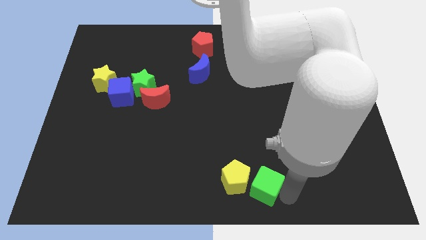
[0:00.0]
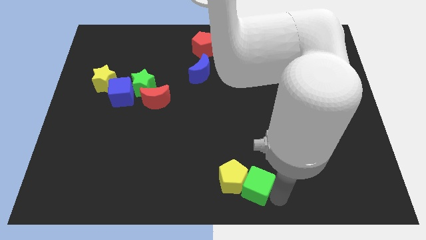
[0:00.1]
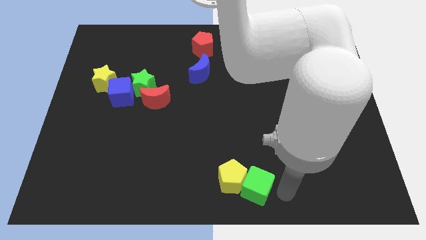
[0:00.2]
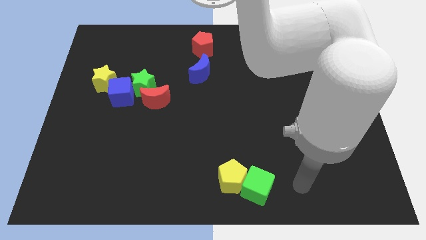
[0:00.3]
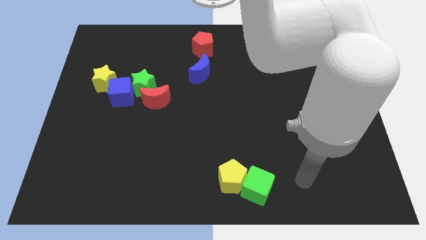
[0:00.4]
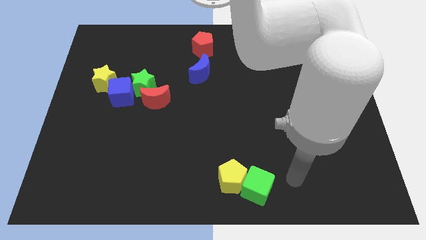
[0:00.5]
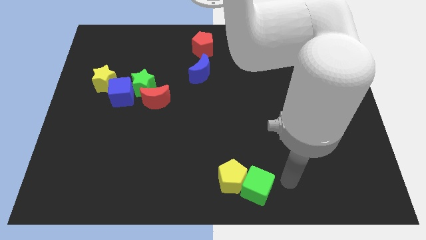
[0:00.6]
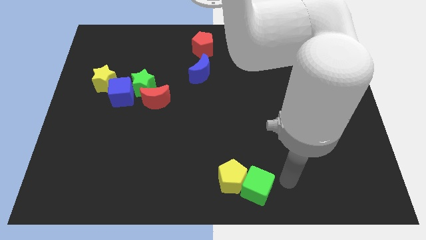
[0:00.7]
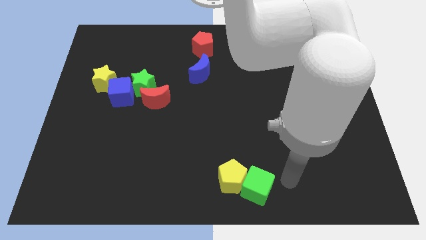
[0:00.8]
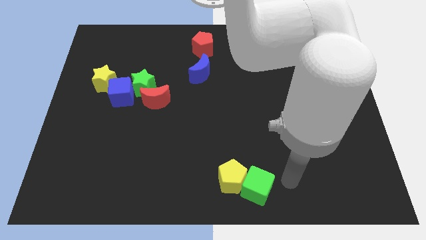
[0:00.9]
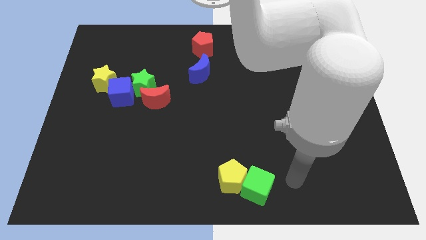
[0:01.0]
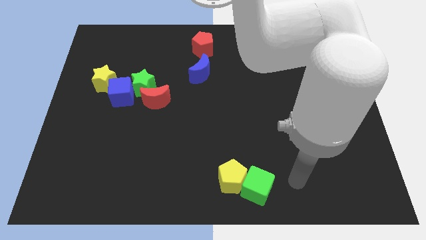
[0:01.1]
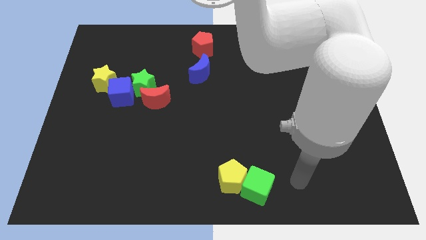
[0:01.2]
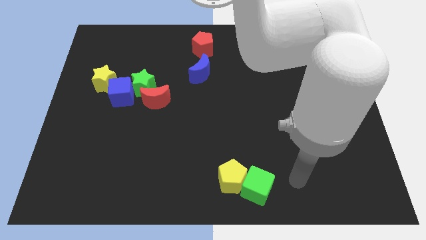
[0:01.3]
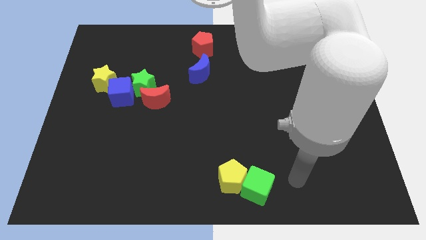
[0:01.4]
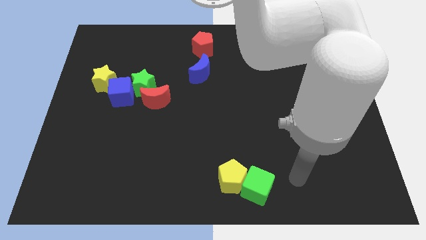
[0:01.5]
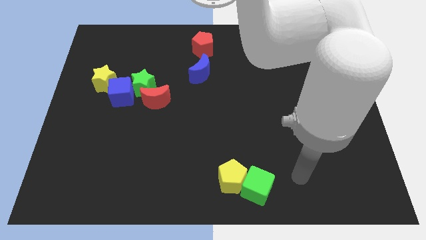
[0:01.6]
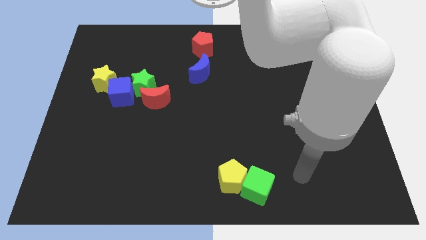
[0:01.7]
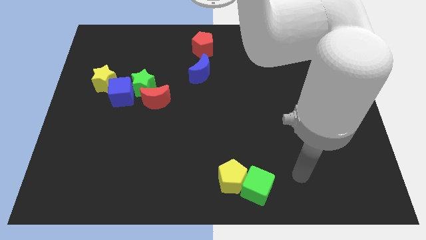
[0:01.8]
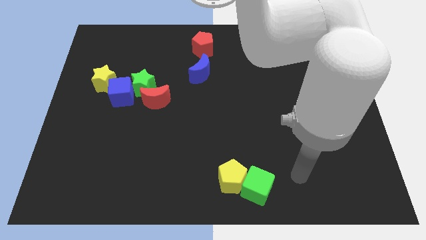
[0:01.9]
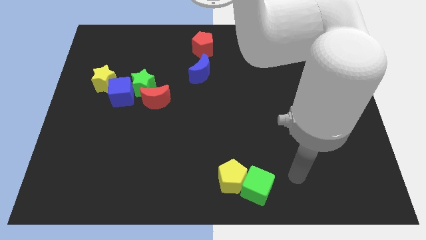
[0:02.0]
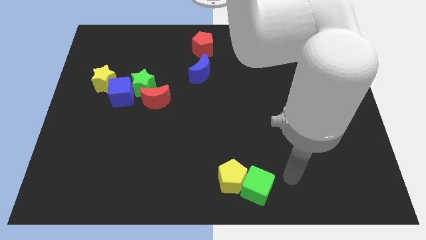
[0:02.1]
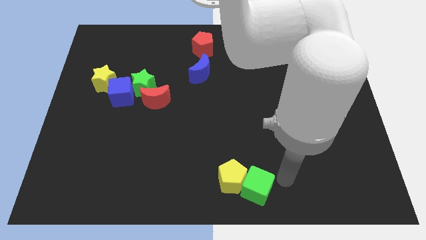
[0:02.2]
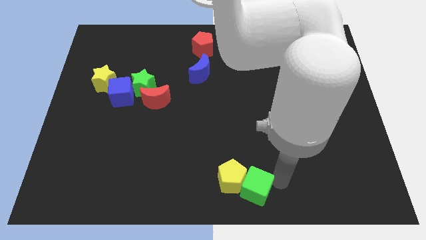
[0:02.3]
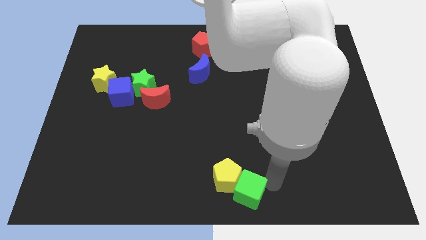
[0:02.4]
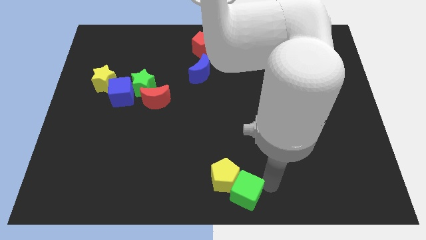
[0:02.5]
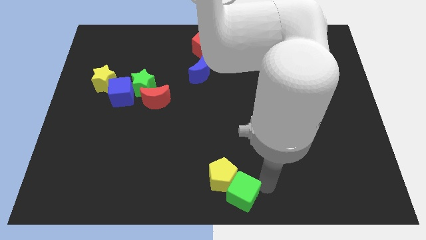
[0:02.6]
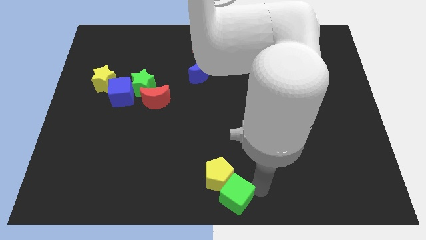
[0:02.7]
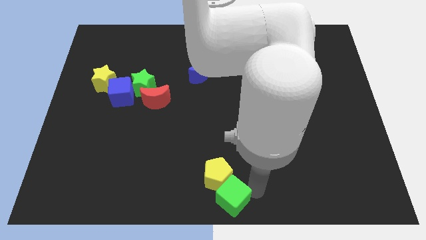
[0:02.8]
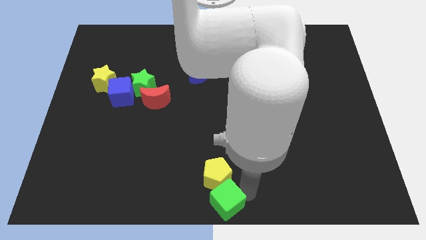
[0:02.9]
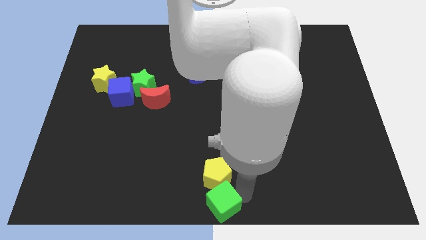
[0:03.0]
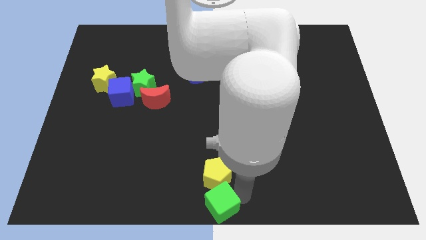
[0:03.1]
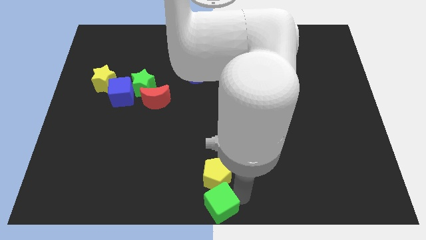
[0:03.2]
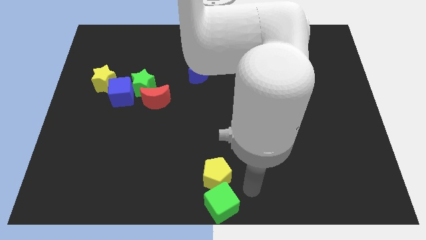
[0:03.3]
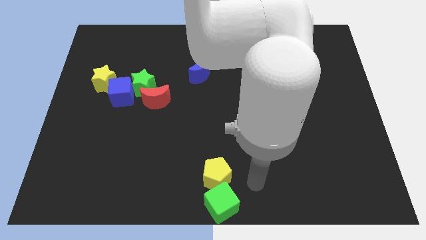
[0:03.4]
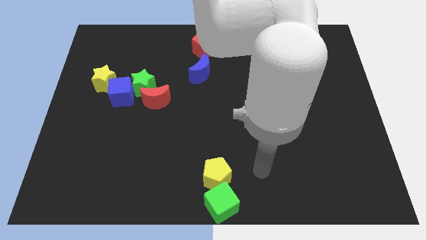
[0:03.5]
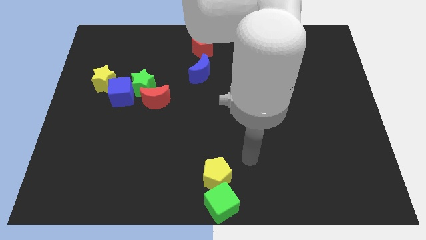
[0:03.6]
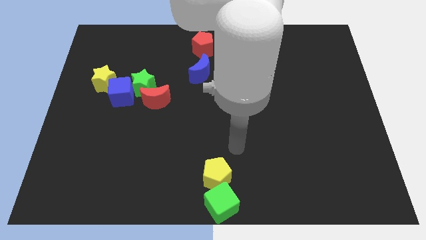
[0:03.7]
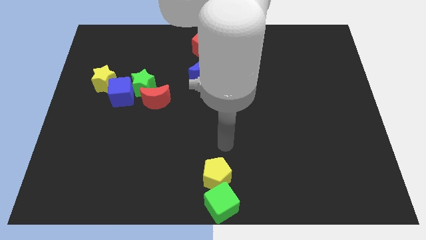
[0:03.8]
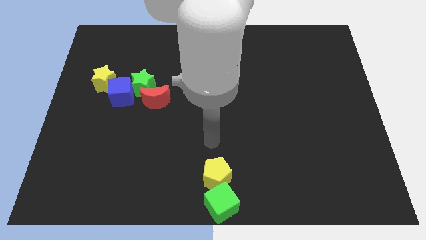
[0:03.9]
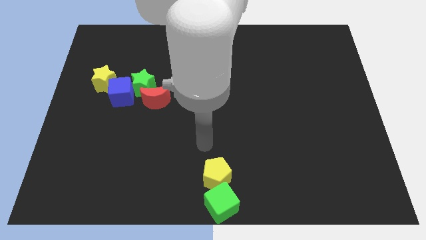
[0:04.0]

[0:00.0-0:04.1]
place green cube to the bottom center of the board

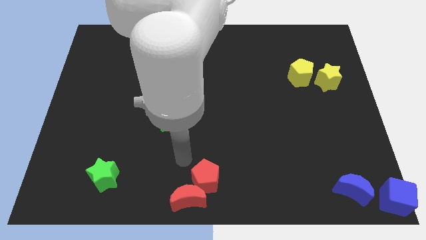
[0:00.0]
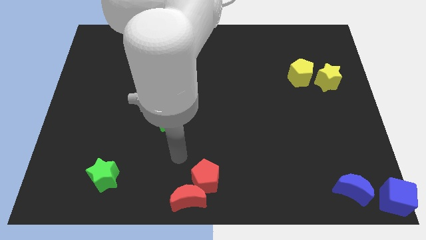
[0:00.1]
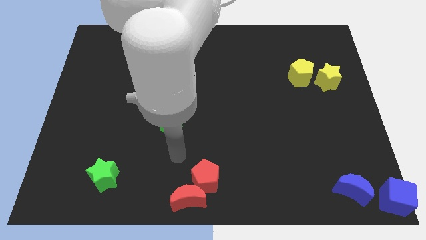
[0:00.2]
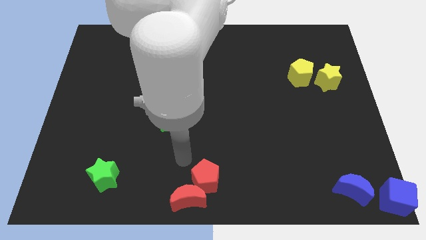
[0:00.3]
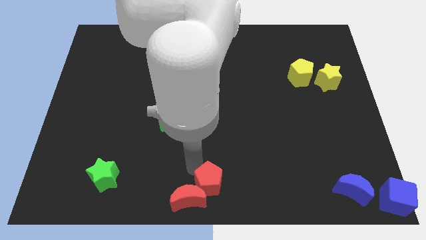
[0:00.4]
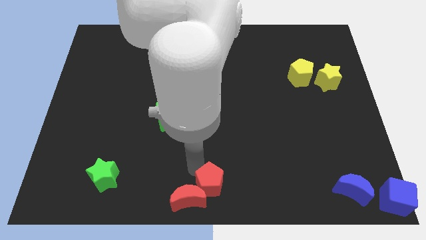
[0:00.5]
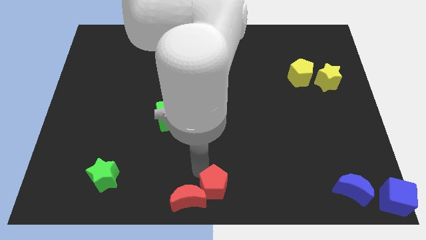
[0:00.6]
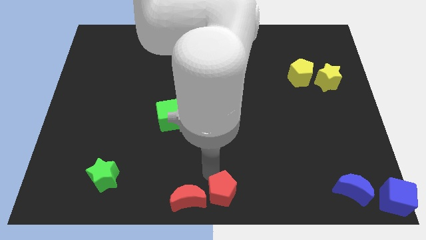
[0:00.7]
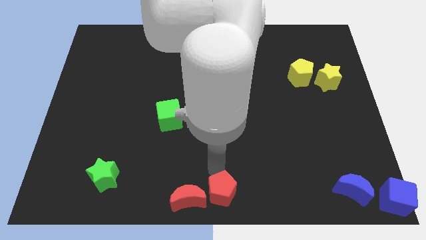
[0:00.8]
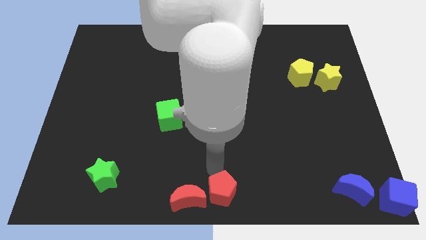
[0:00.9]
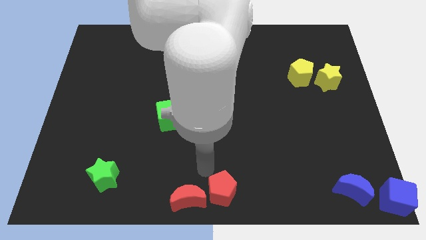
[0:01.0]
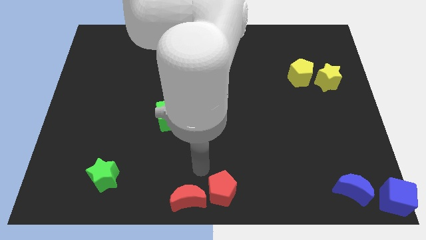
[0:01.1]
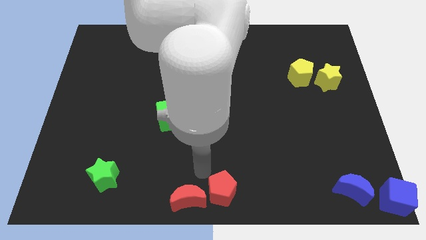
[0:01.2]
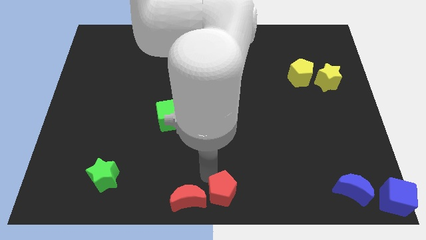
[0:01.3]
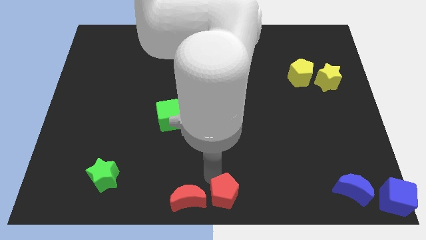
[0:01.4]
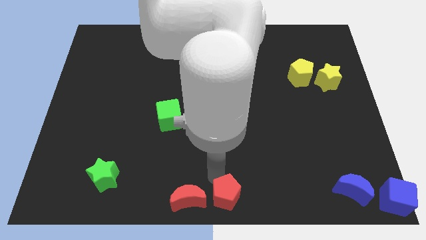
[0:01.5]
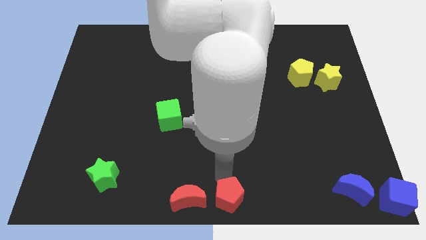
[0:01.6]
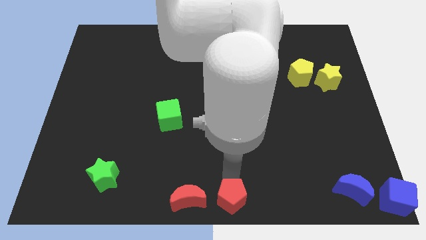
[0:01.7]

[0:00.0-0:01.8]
place the red pentagon right to the red moon

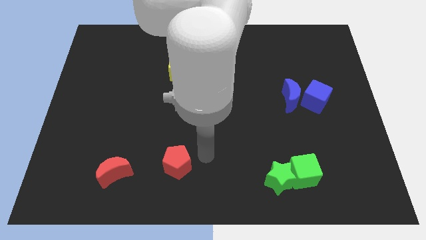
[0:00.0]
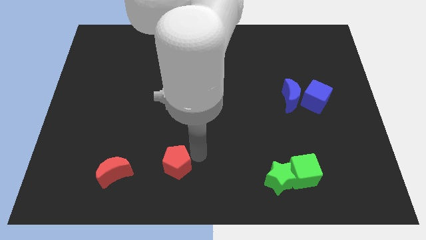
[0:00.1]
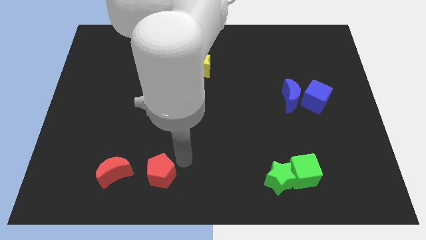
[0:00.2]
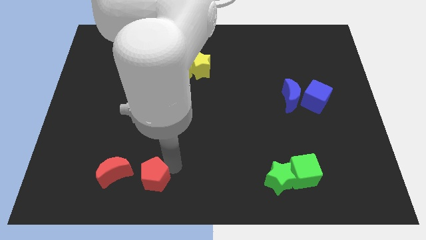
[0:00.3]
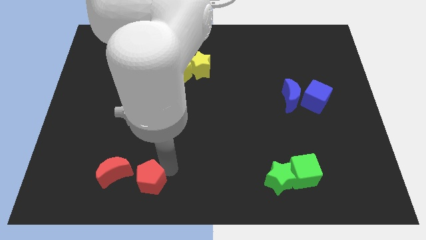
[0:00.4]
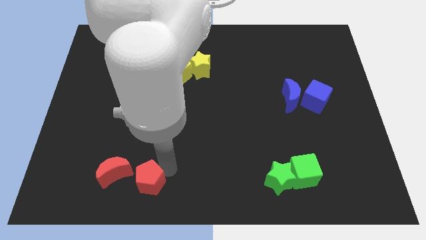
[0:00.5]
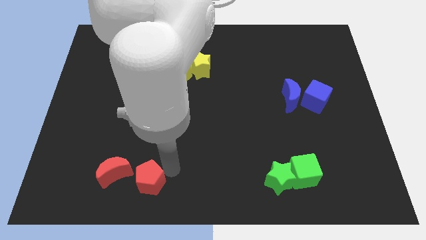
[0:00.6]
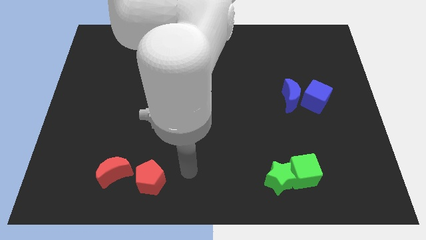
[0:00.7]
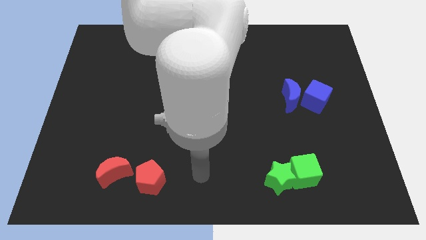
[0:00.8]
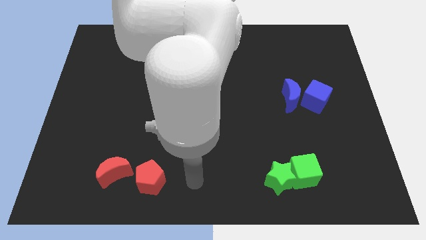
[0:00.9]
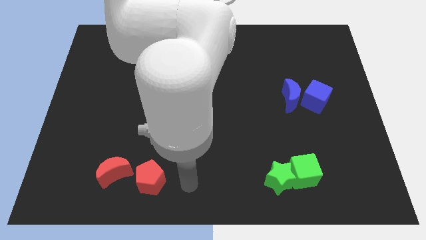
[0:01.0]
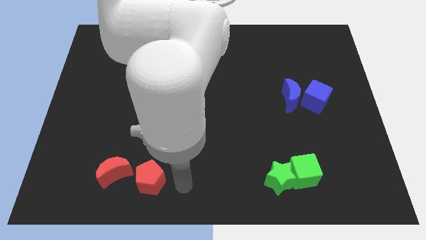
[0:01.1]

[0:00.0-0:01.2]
move the red pentagon to the right of the red crescent

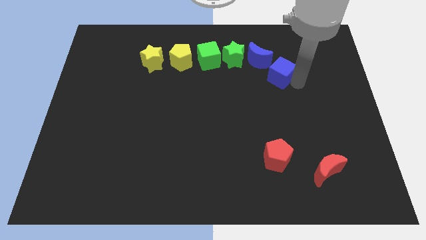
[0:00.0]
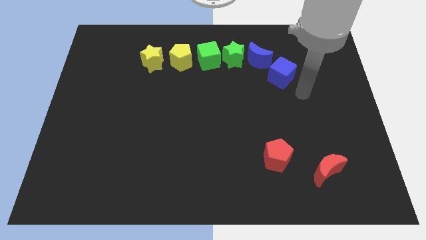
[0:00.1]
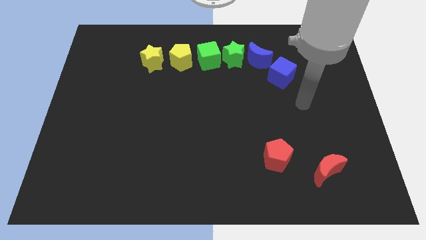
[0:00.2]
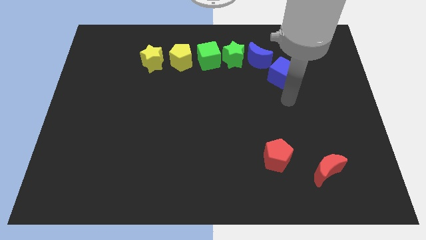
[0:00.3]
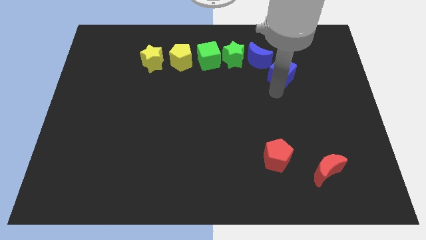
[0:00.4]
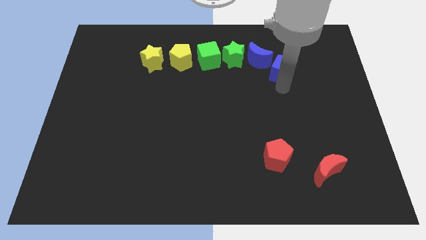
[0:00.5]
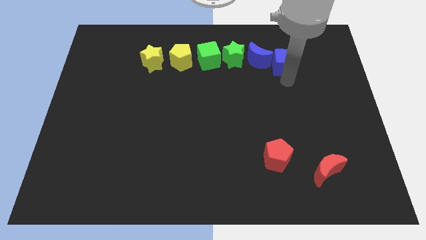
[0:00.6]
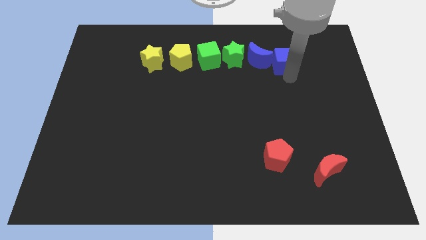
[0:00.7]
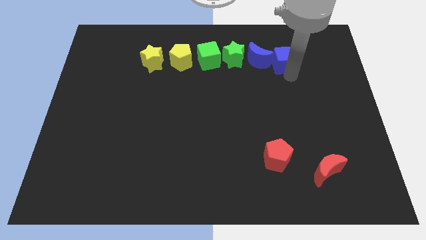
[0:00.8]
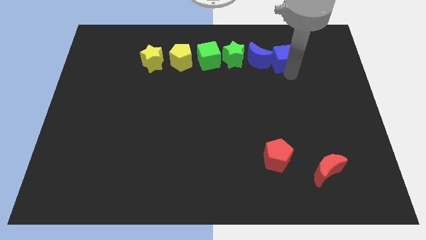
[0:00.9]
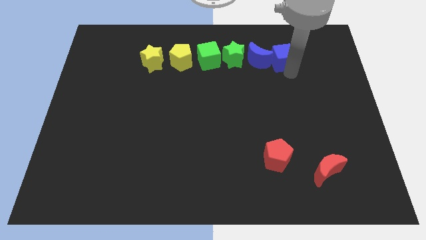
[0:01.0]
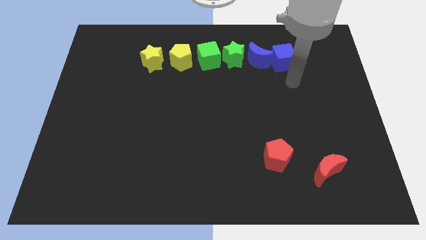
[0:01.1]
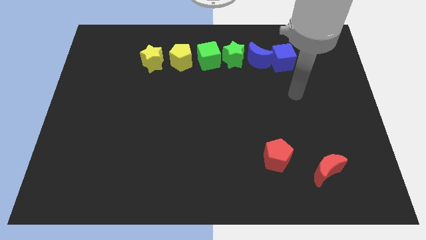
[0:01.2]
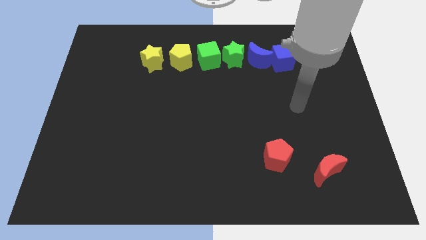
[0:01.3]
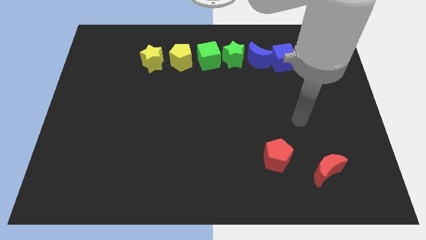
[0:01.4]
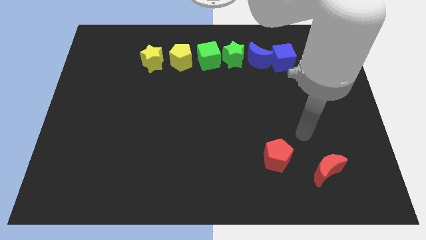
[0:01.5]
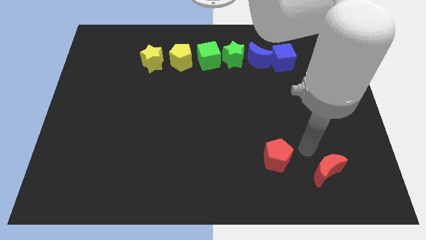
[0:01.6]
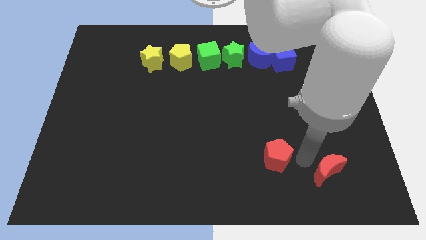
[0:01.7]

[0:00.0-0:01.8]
push the blue cube towards the blue crescent
